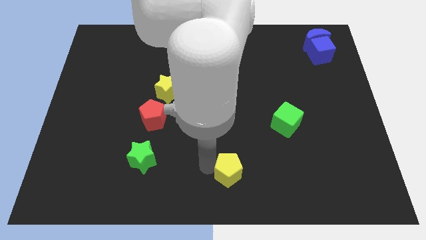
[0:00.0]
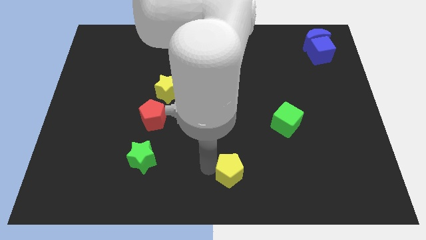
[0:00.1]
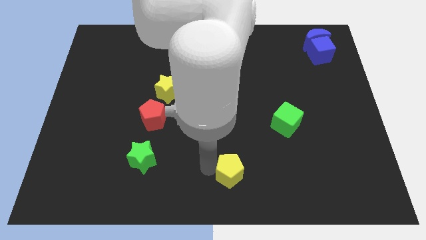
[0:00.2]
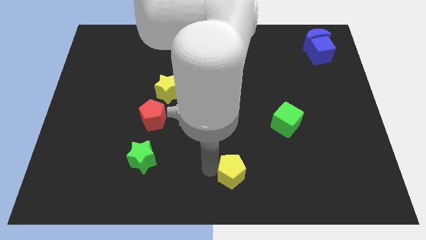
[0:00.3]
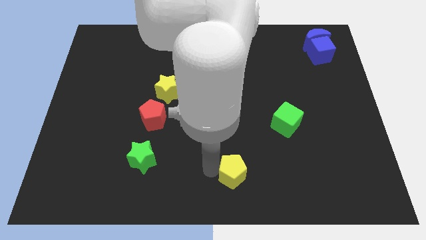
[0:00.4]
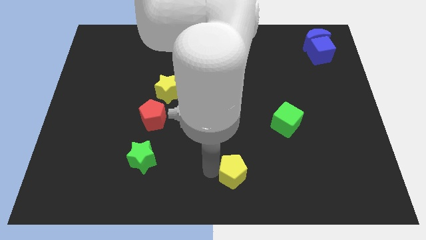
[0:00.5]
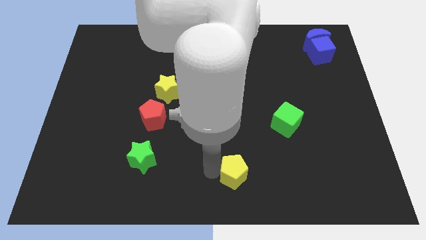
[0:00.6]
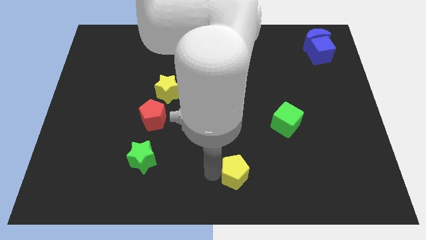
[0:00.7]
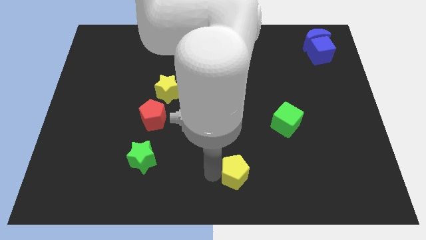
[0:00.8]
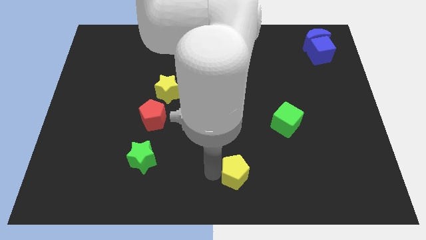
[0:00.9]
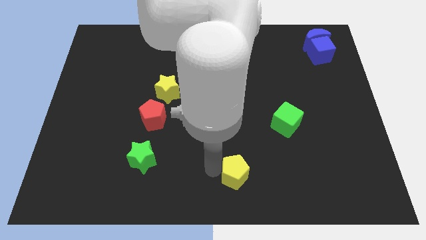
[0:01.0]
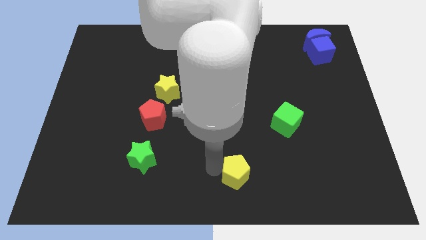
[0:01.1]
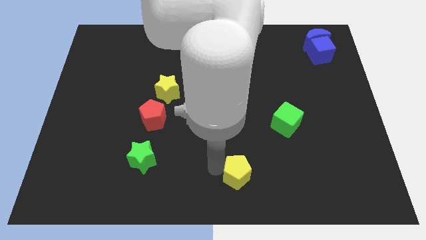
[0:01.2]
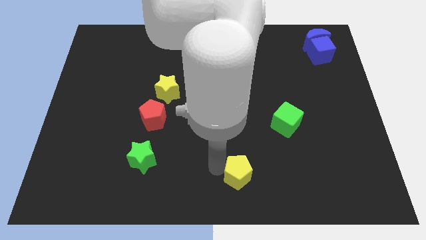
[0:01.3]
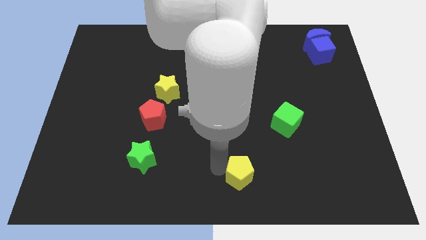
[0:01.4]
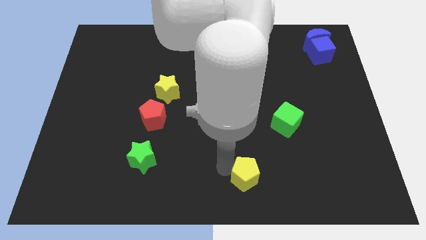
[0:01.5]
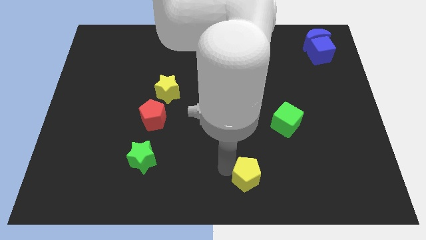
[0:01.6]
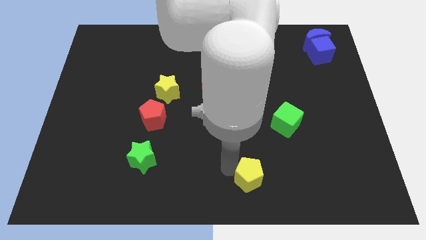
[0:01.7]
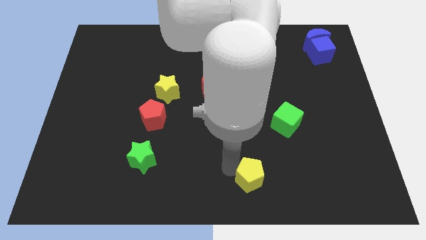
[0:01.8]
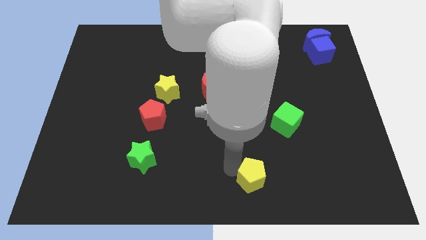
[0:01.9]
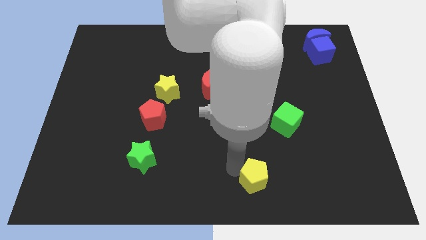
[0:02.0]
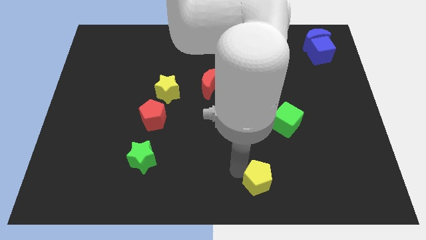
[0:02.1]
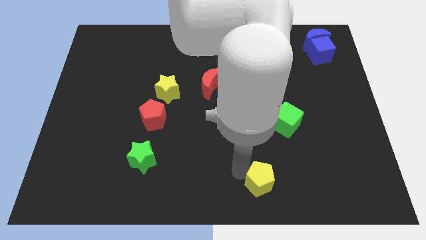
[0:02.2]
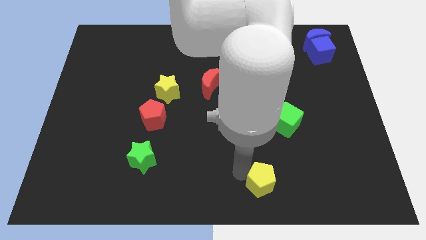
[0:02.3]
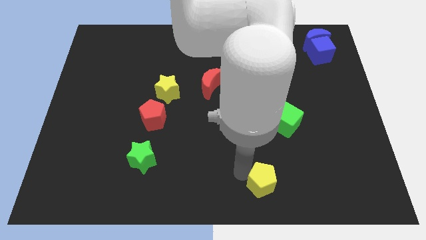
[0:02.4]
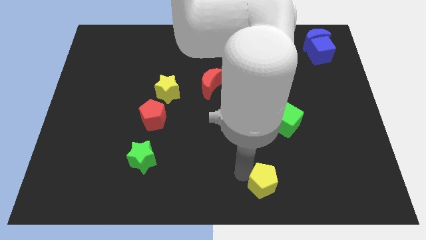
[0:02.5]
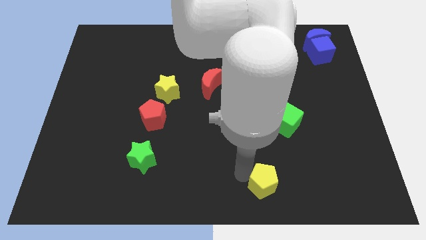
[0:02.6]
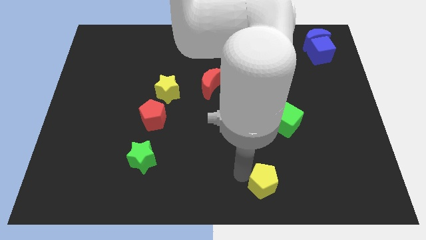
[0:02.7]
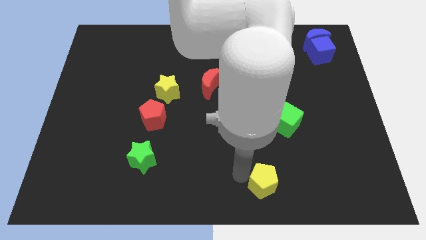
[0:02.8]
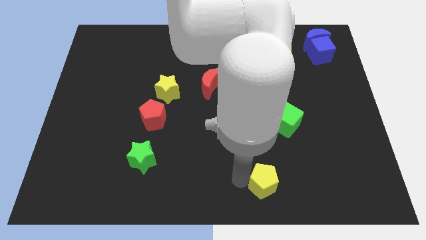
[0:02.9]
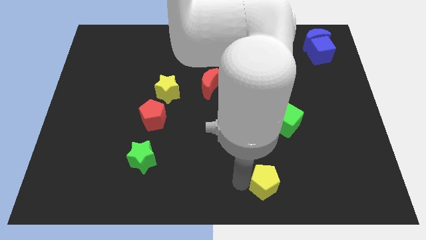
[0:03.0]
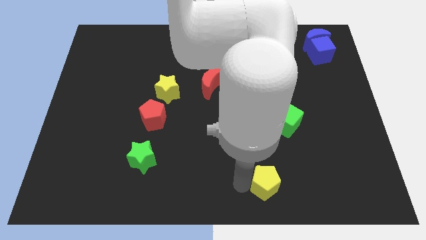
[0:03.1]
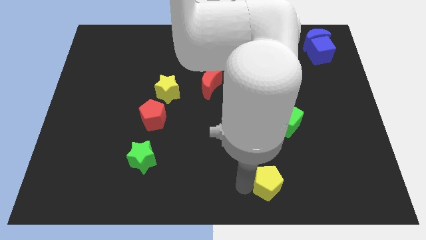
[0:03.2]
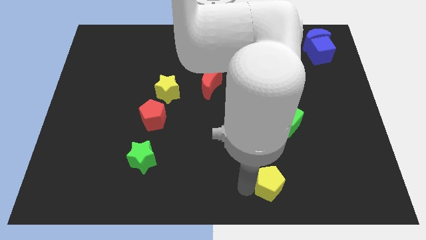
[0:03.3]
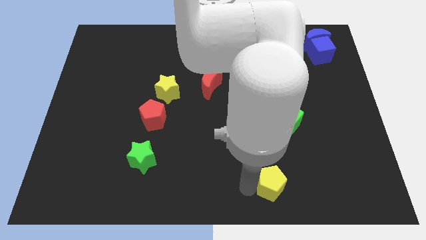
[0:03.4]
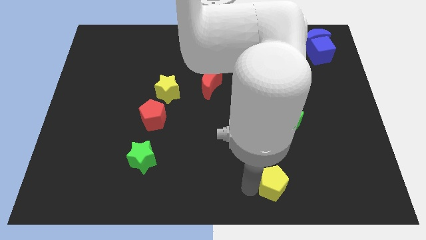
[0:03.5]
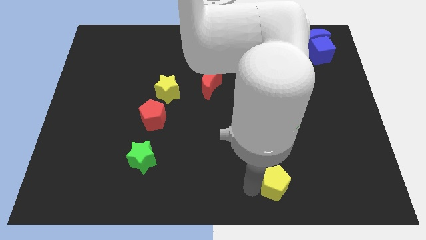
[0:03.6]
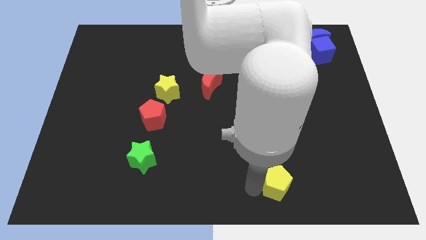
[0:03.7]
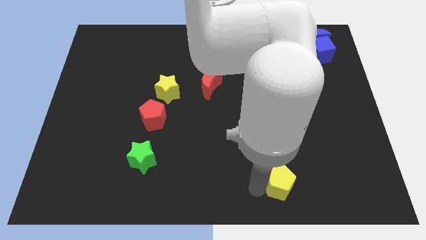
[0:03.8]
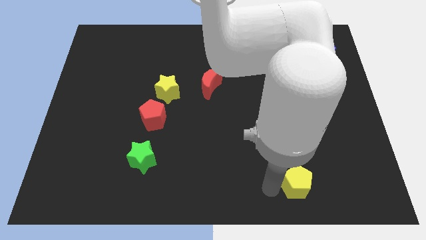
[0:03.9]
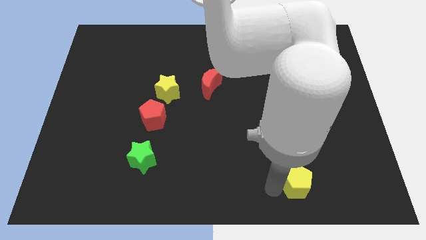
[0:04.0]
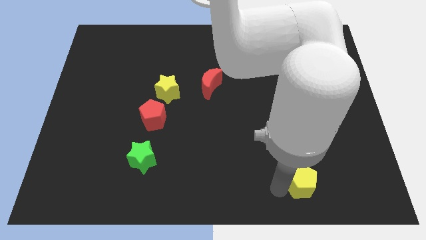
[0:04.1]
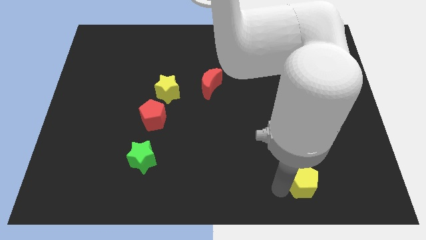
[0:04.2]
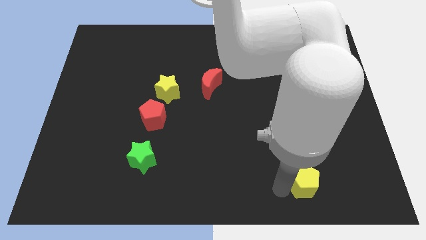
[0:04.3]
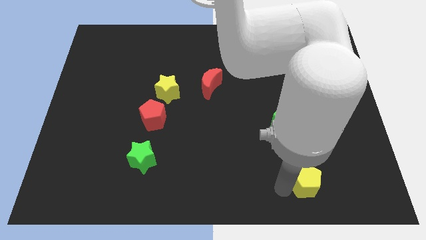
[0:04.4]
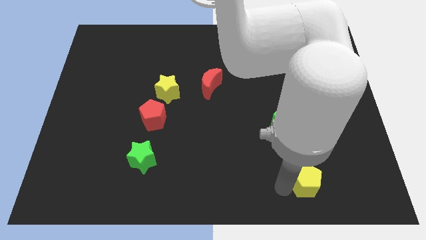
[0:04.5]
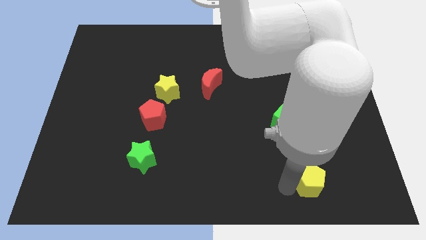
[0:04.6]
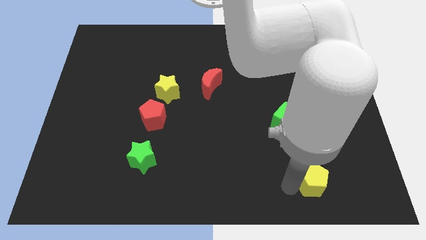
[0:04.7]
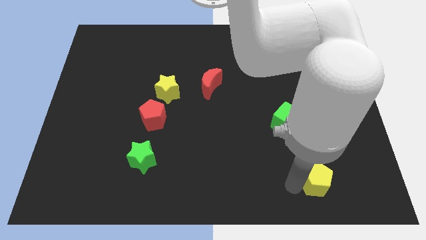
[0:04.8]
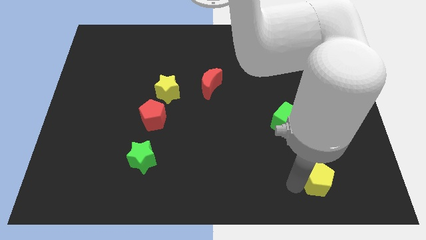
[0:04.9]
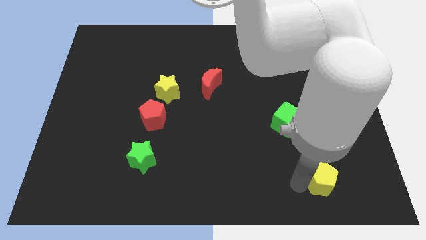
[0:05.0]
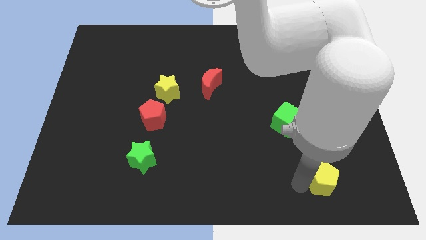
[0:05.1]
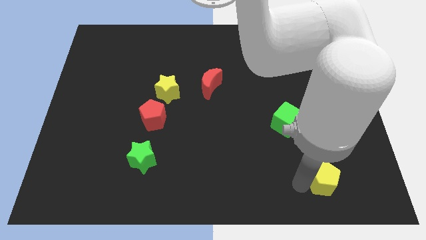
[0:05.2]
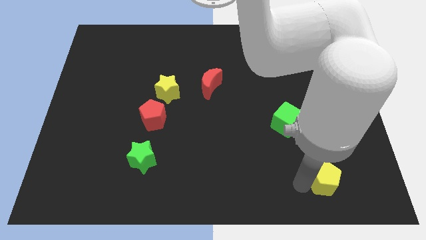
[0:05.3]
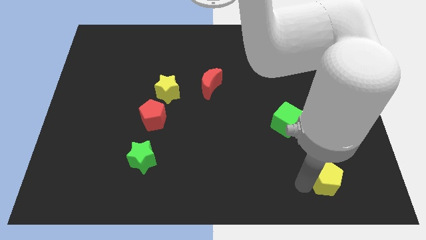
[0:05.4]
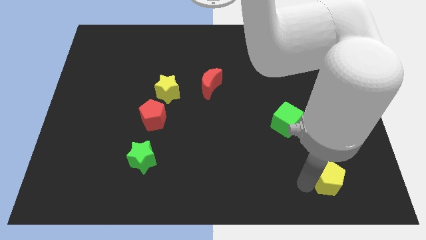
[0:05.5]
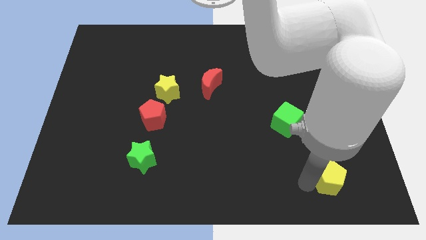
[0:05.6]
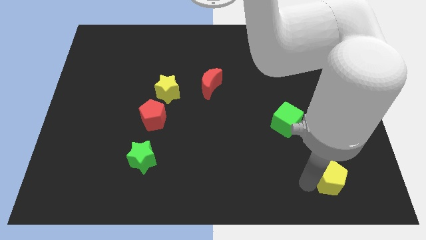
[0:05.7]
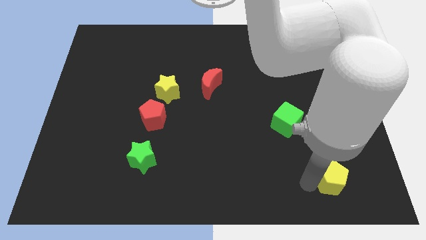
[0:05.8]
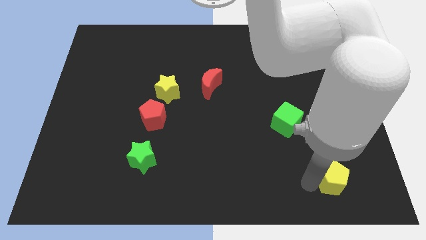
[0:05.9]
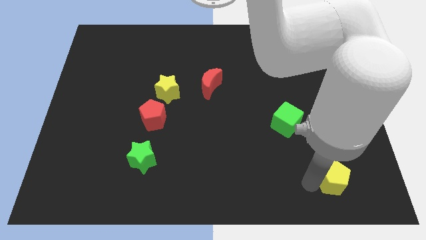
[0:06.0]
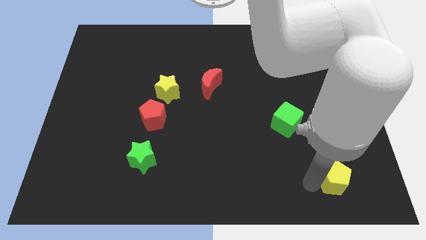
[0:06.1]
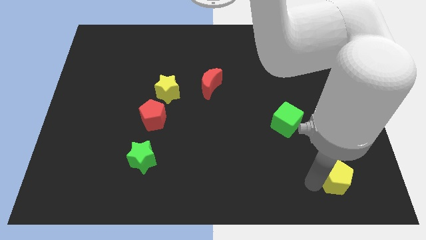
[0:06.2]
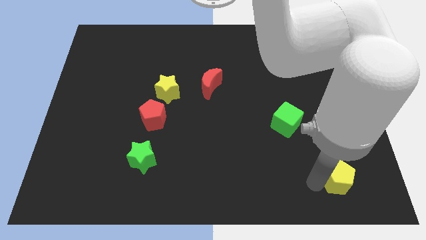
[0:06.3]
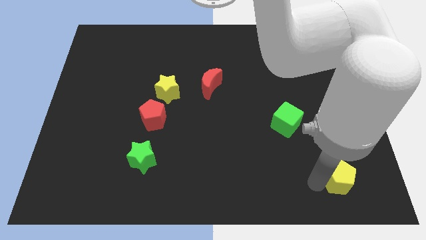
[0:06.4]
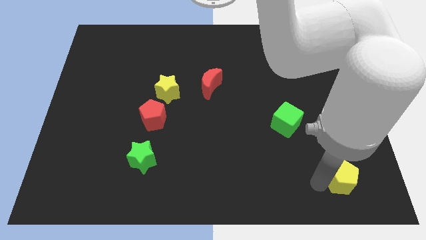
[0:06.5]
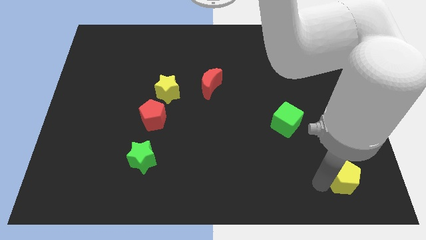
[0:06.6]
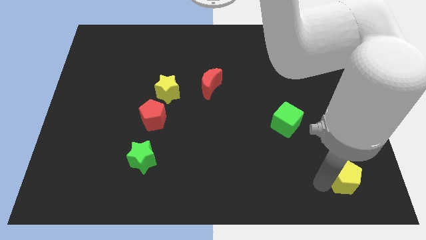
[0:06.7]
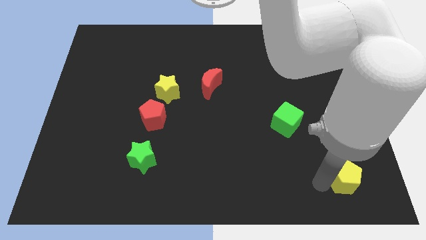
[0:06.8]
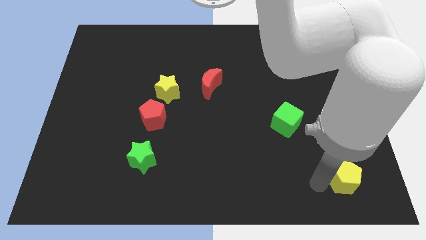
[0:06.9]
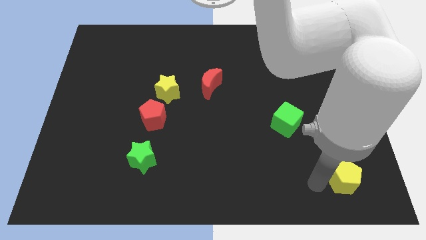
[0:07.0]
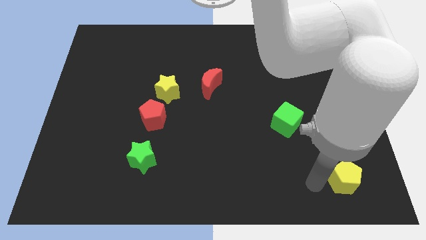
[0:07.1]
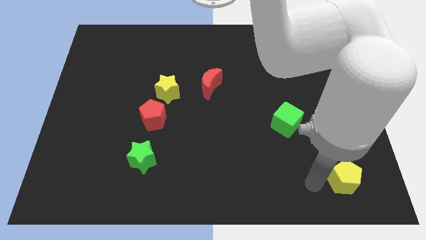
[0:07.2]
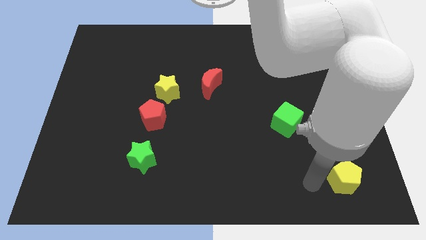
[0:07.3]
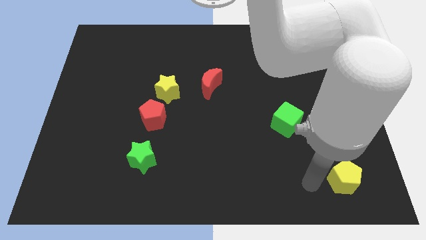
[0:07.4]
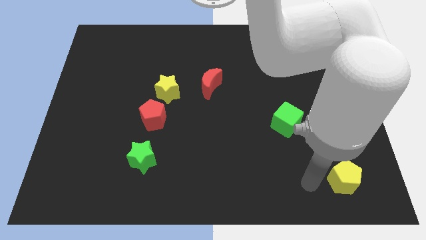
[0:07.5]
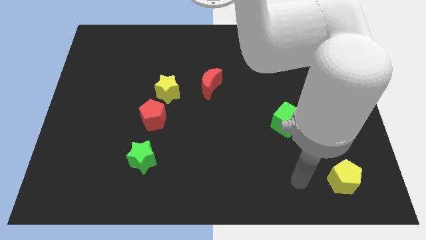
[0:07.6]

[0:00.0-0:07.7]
move the yellow pentagon to the bottom right corner of the board

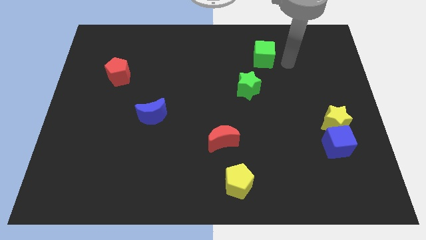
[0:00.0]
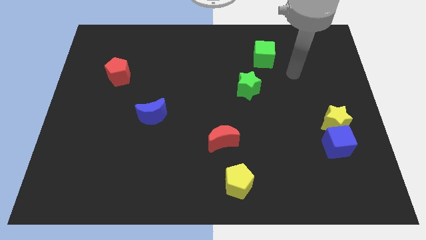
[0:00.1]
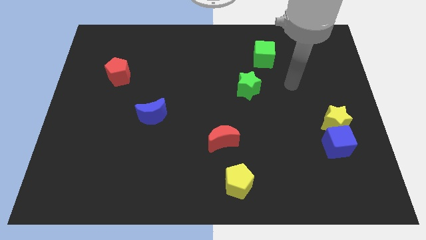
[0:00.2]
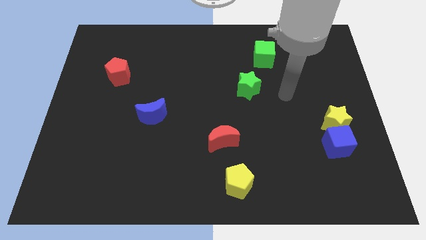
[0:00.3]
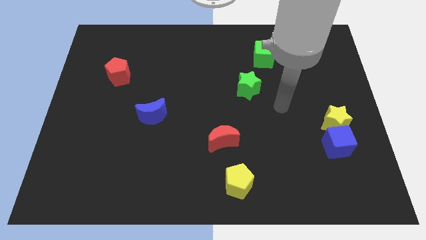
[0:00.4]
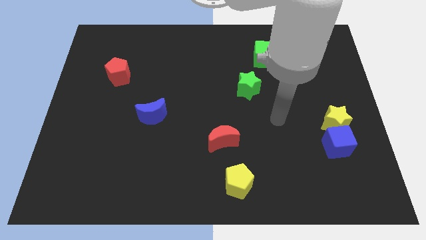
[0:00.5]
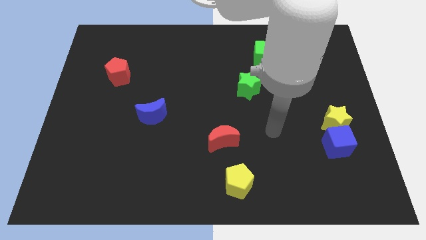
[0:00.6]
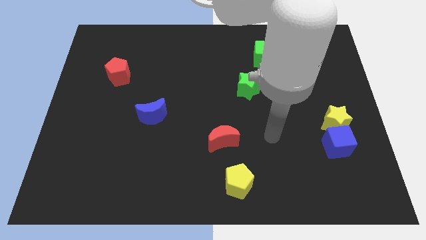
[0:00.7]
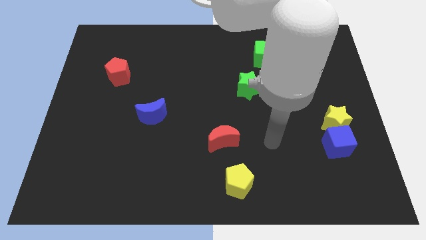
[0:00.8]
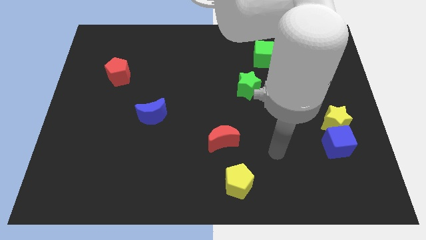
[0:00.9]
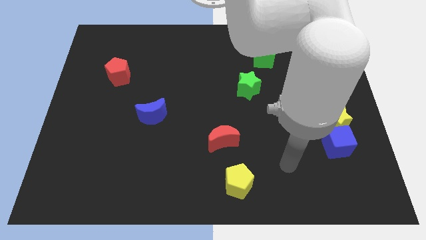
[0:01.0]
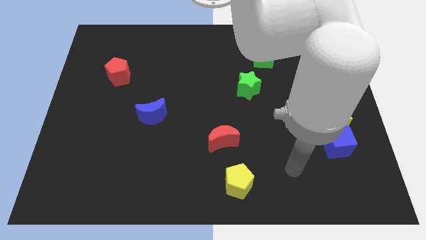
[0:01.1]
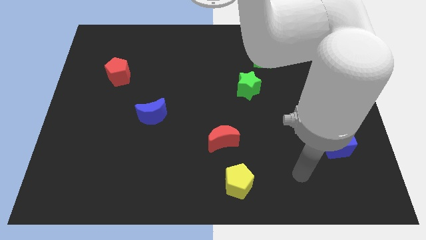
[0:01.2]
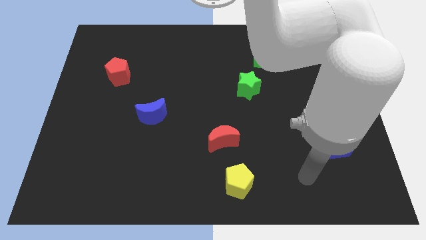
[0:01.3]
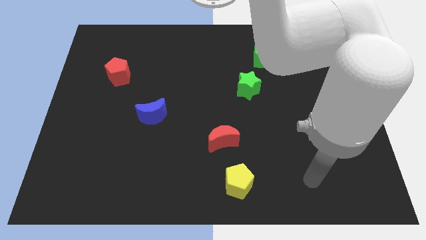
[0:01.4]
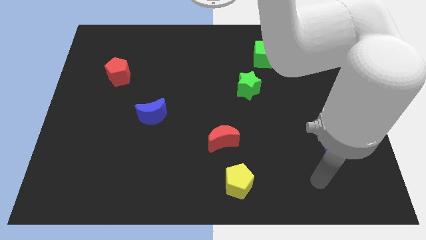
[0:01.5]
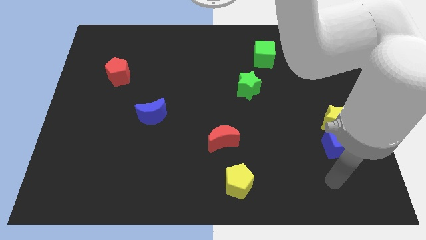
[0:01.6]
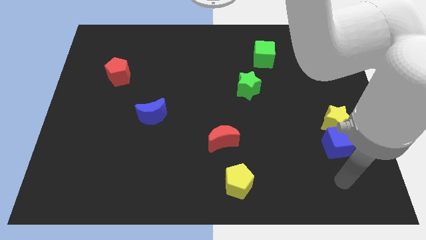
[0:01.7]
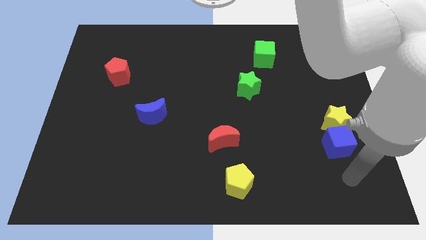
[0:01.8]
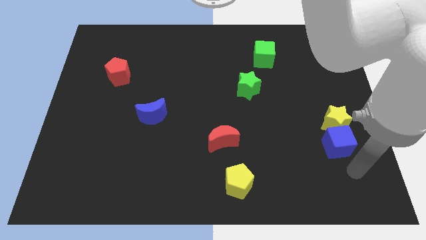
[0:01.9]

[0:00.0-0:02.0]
point your hand at the bottom side of the blue cube
